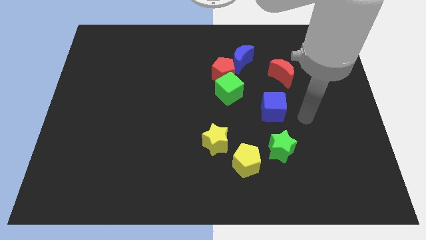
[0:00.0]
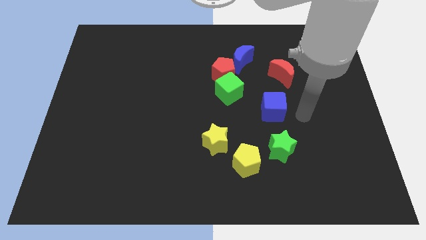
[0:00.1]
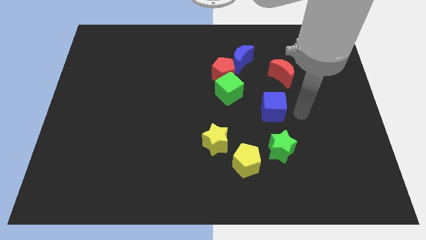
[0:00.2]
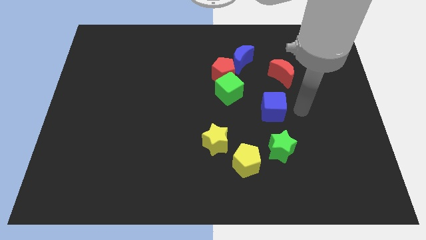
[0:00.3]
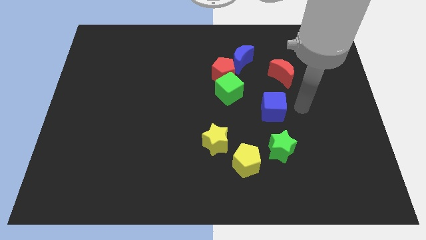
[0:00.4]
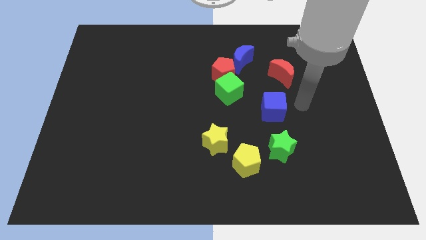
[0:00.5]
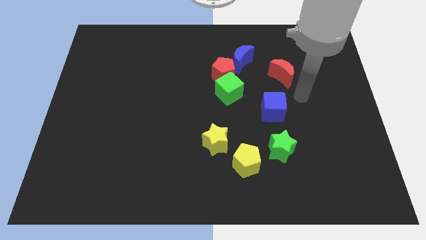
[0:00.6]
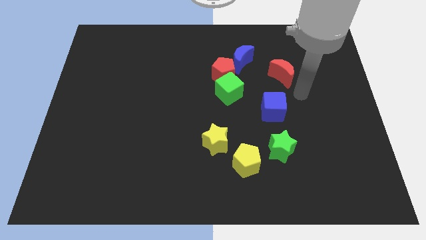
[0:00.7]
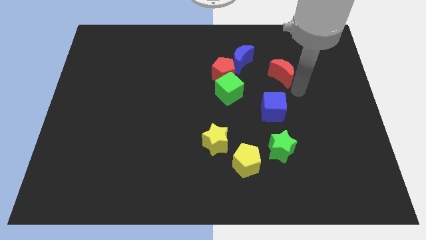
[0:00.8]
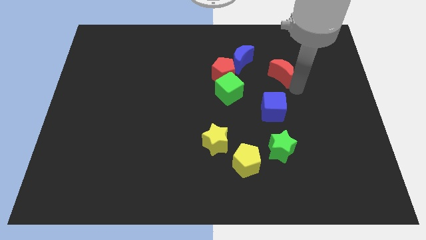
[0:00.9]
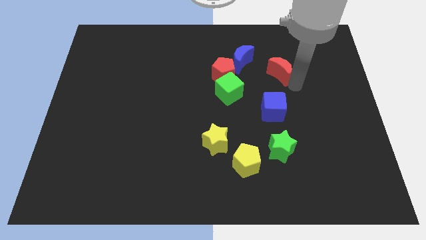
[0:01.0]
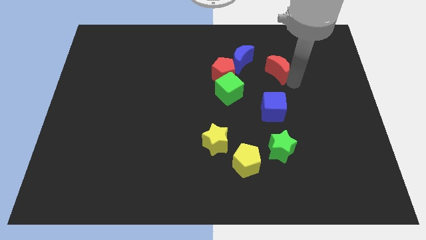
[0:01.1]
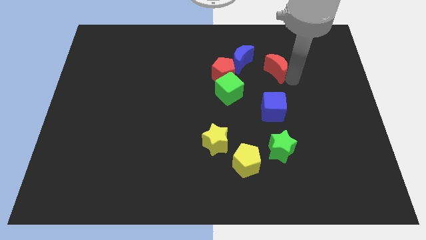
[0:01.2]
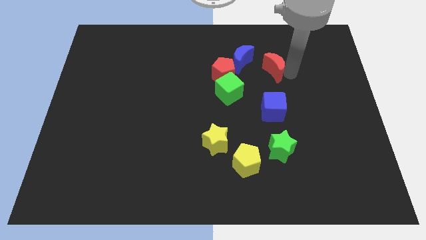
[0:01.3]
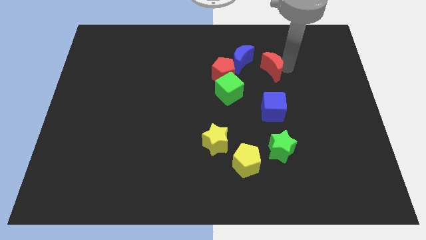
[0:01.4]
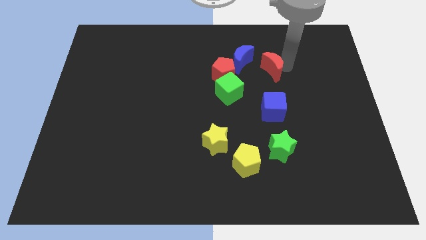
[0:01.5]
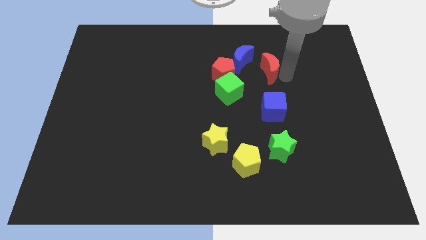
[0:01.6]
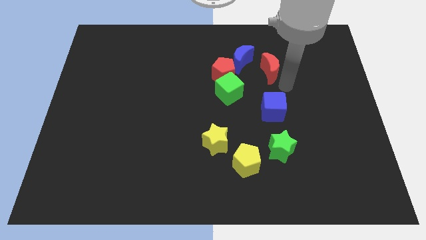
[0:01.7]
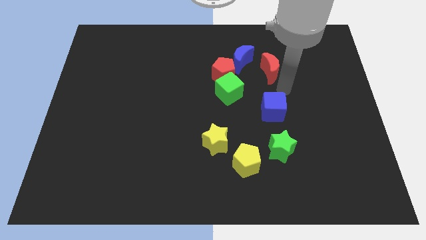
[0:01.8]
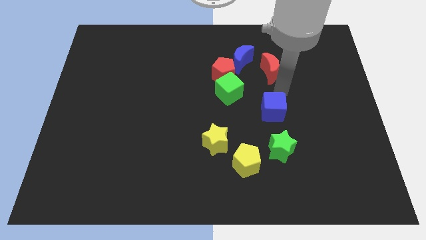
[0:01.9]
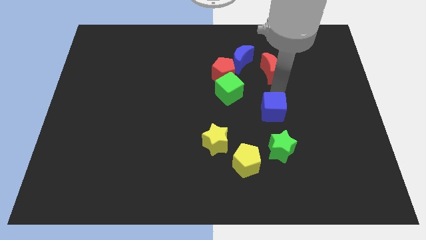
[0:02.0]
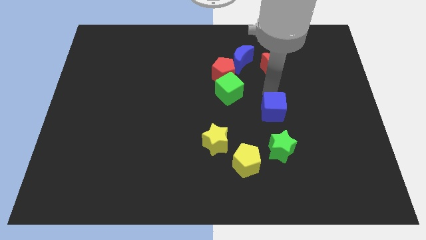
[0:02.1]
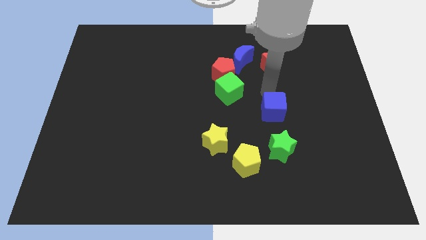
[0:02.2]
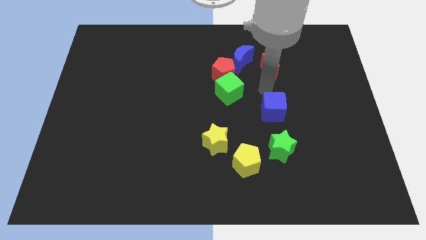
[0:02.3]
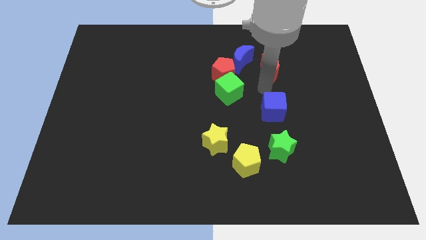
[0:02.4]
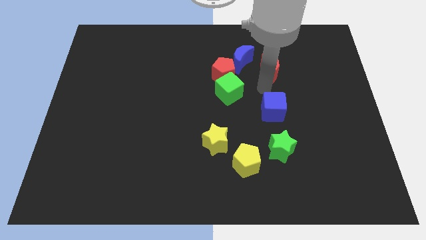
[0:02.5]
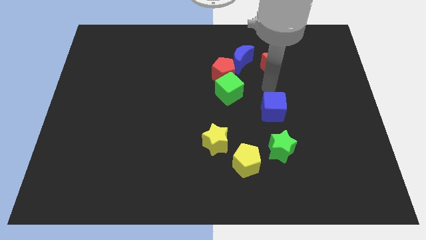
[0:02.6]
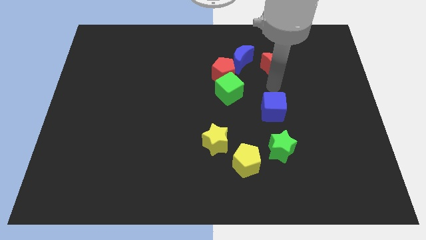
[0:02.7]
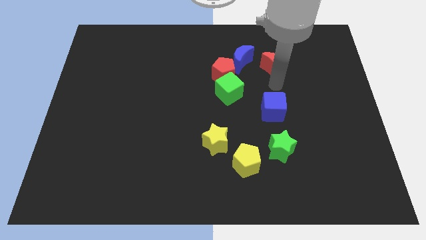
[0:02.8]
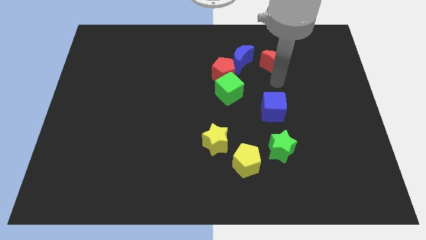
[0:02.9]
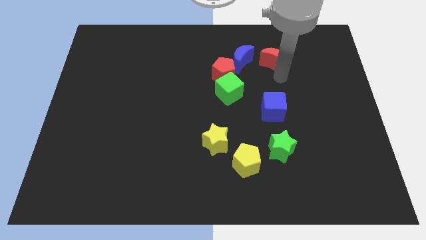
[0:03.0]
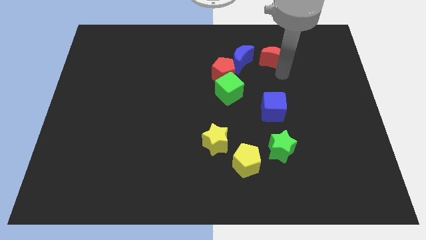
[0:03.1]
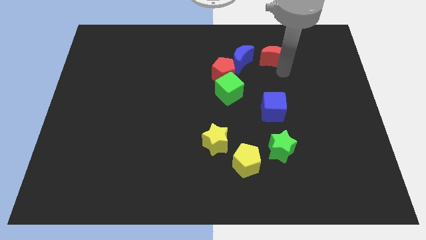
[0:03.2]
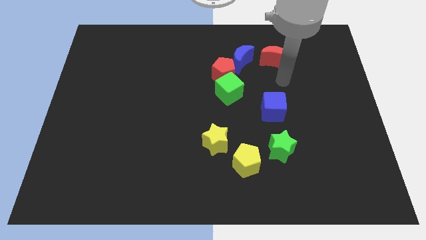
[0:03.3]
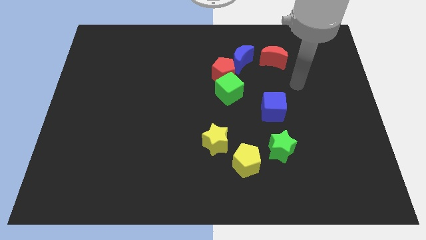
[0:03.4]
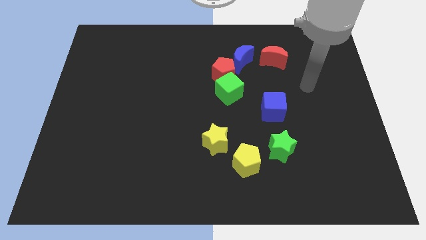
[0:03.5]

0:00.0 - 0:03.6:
place the red crescent vertically above the blue cube

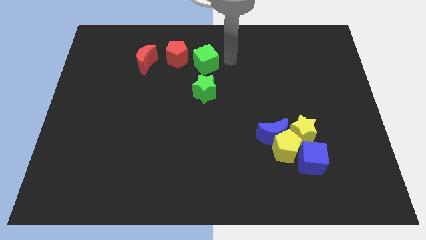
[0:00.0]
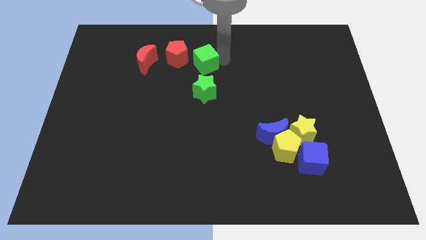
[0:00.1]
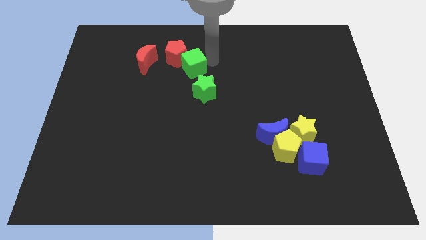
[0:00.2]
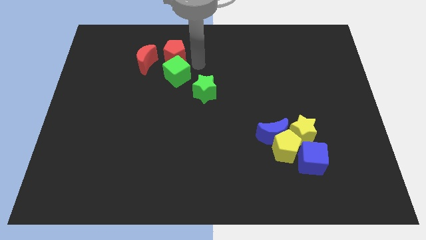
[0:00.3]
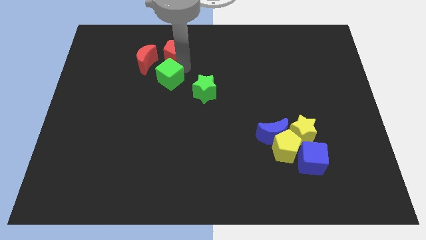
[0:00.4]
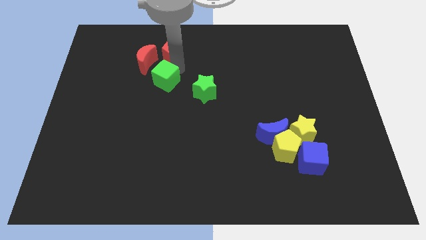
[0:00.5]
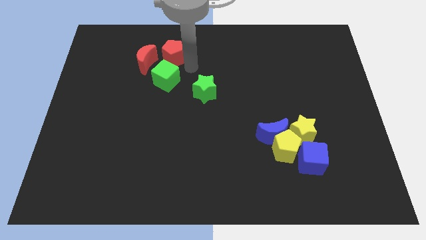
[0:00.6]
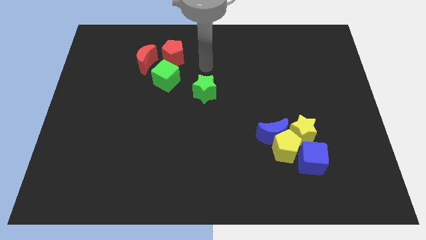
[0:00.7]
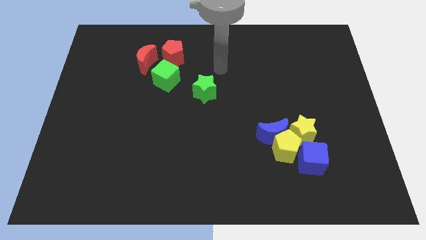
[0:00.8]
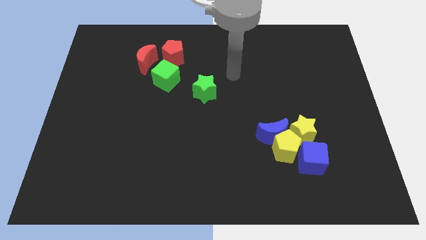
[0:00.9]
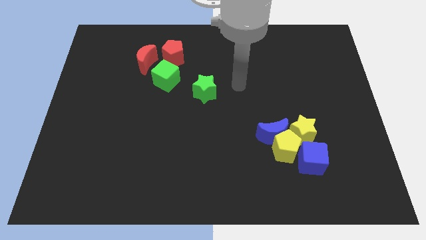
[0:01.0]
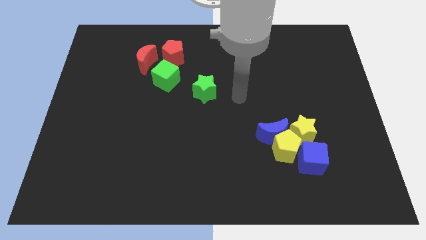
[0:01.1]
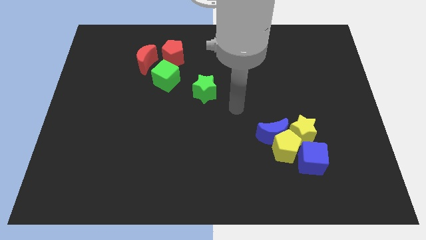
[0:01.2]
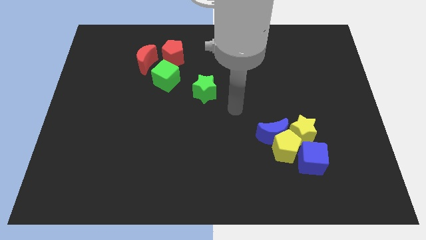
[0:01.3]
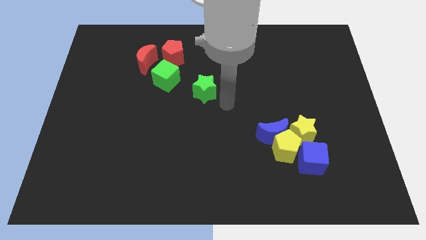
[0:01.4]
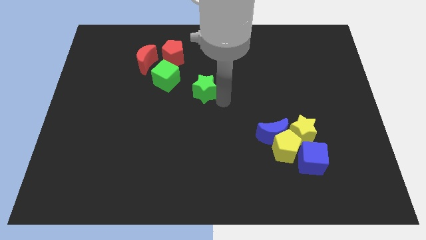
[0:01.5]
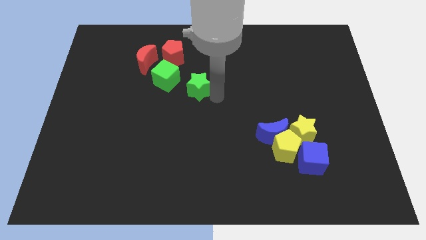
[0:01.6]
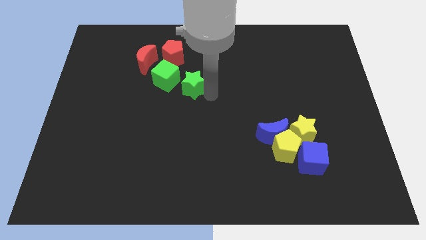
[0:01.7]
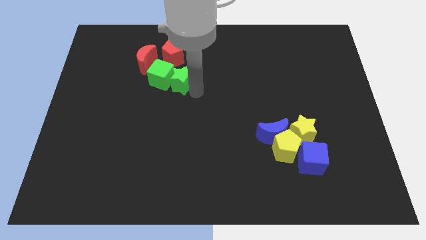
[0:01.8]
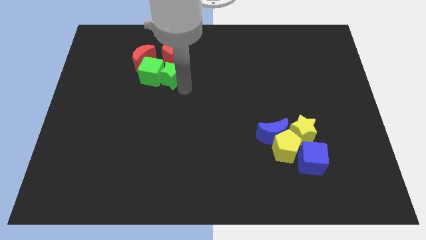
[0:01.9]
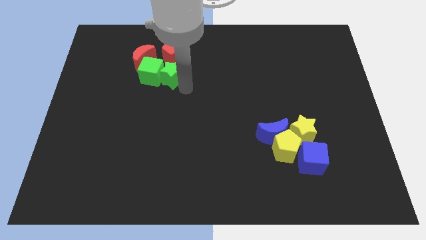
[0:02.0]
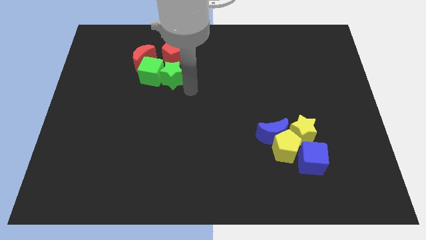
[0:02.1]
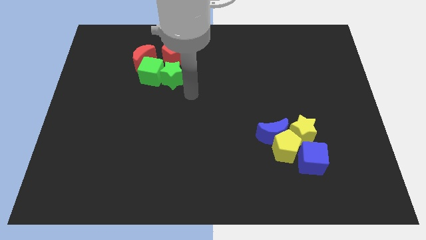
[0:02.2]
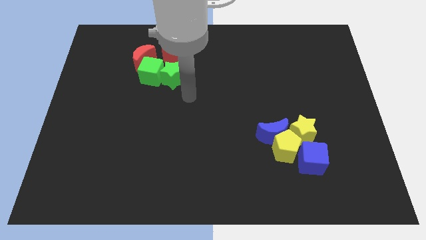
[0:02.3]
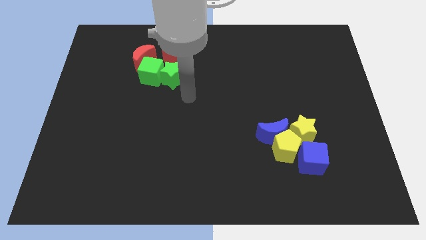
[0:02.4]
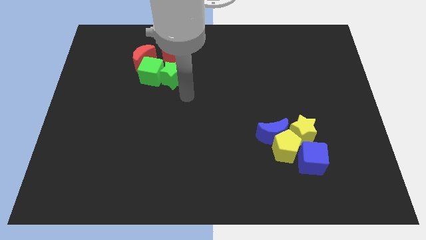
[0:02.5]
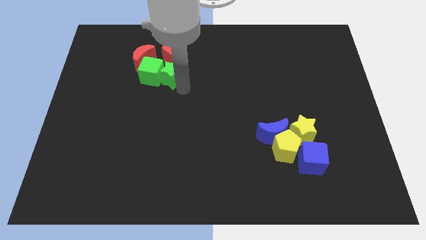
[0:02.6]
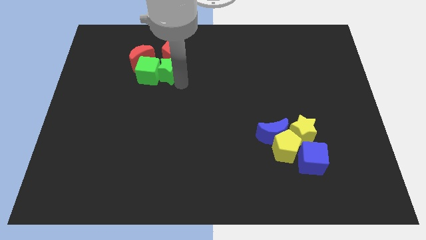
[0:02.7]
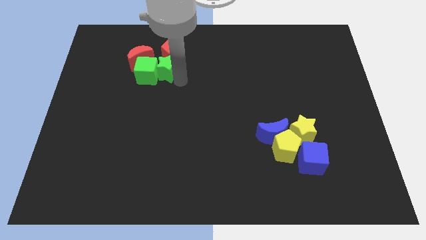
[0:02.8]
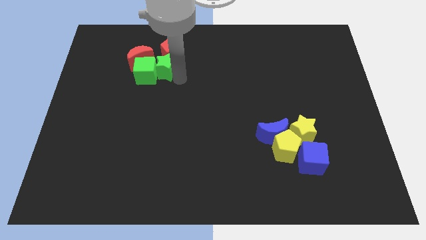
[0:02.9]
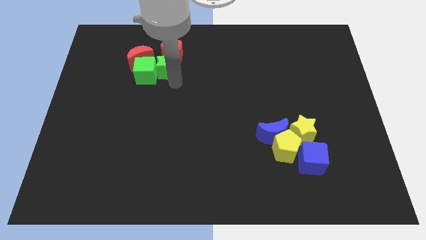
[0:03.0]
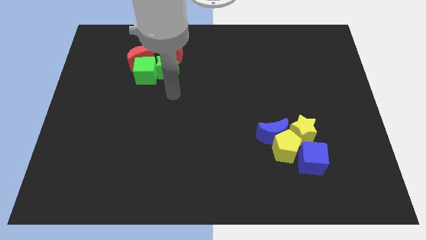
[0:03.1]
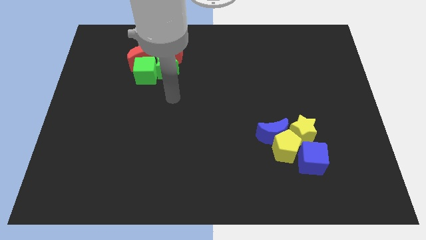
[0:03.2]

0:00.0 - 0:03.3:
group up red and the green blocks

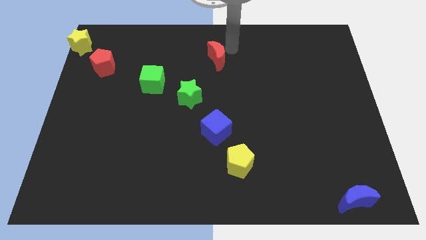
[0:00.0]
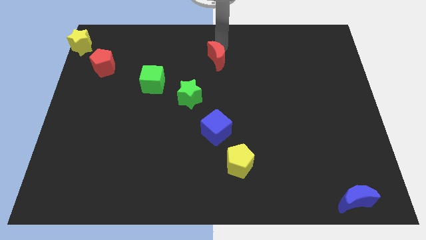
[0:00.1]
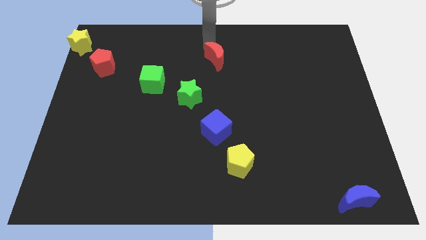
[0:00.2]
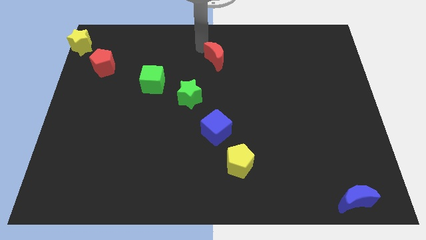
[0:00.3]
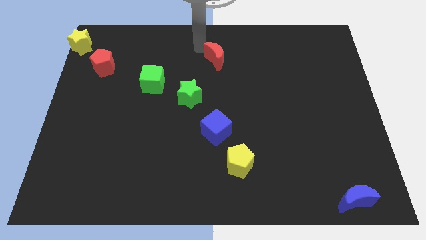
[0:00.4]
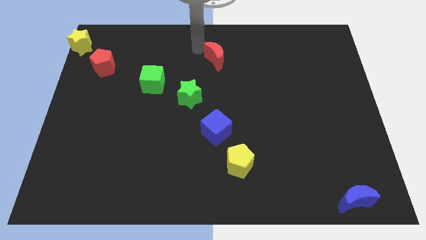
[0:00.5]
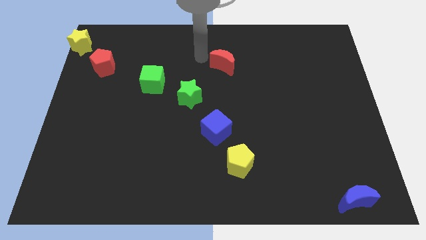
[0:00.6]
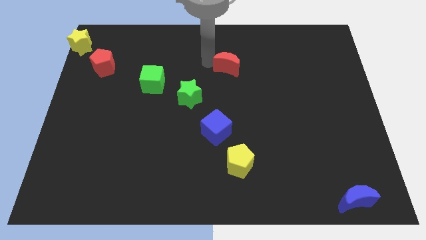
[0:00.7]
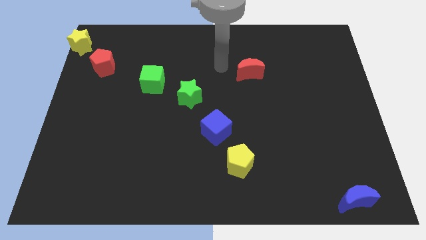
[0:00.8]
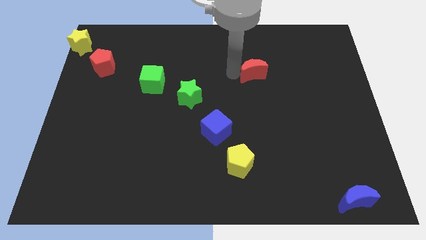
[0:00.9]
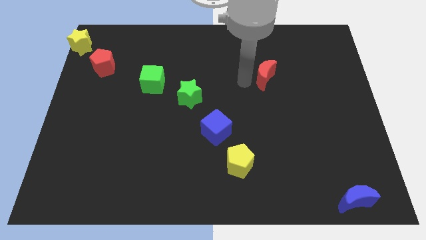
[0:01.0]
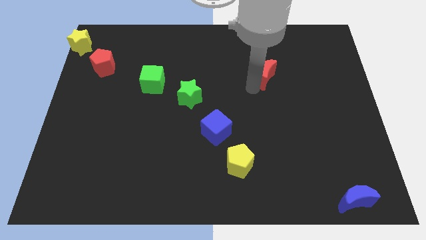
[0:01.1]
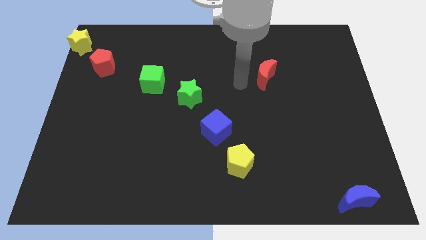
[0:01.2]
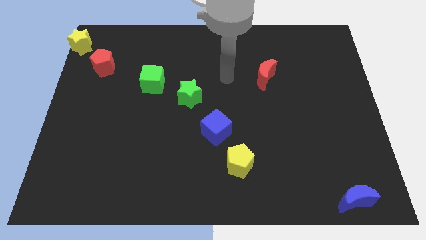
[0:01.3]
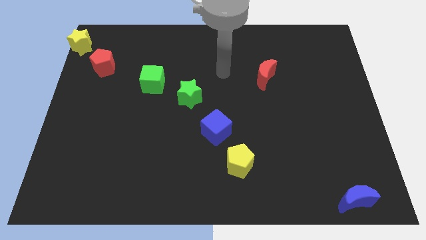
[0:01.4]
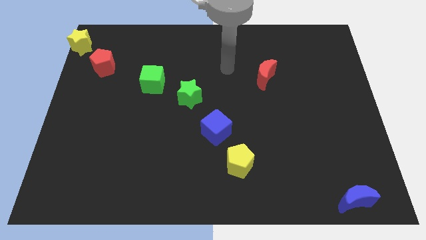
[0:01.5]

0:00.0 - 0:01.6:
put the red crescent diagonal to the top right side of the blue cube

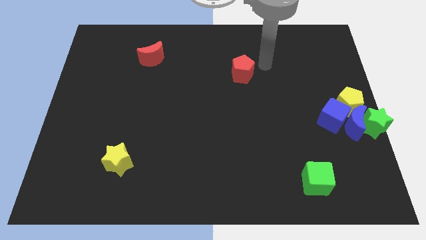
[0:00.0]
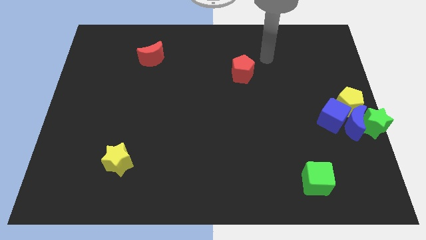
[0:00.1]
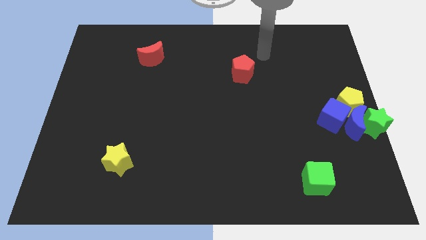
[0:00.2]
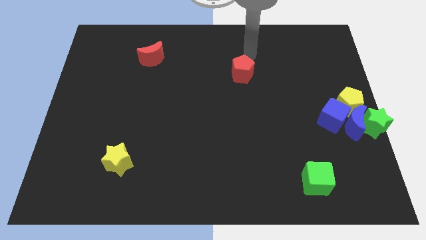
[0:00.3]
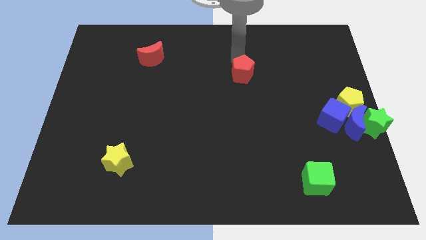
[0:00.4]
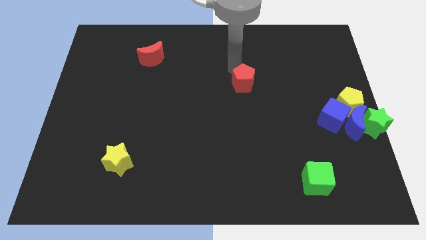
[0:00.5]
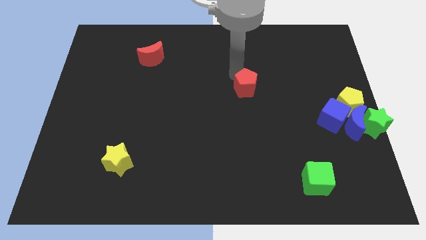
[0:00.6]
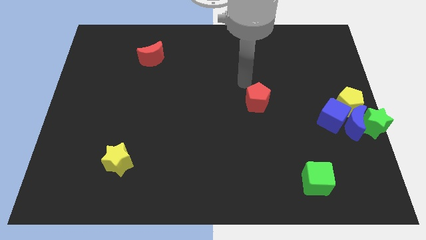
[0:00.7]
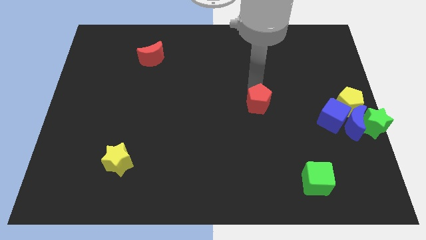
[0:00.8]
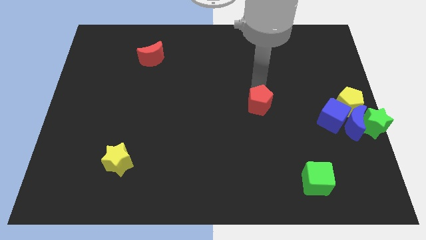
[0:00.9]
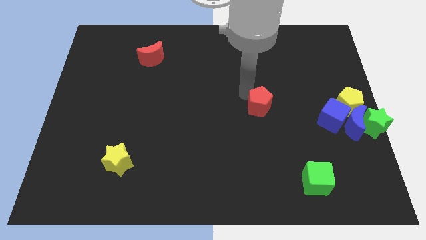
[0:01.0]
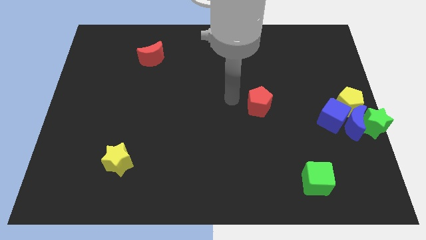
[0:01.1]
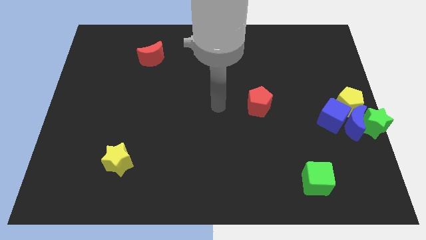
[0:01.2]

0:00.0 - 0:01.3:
move the red pentagon to the downwards
